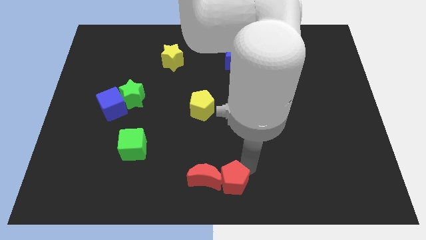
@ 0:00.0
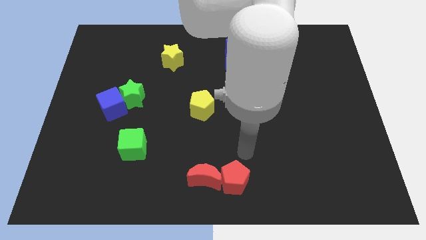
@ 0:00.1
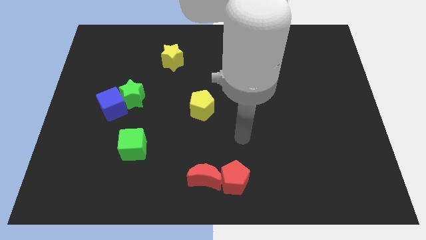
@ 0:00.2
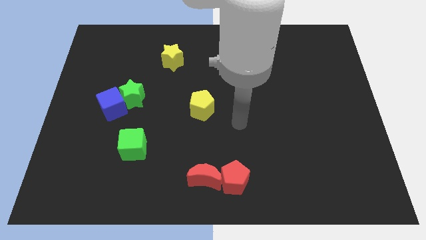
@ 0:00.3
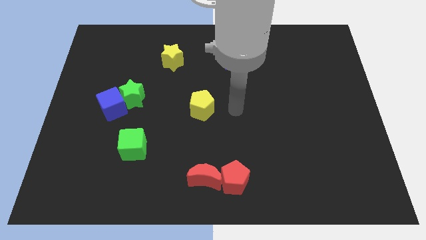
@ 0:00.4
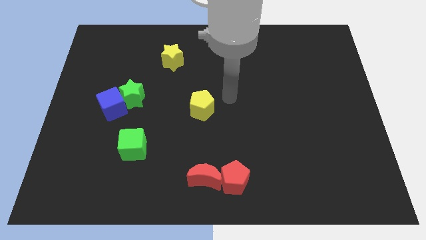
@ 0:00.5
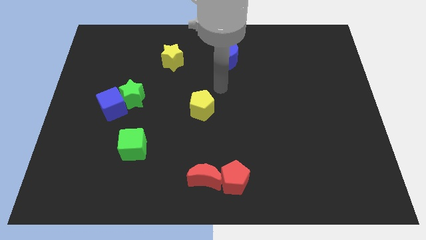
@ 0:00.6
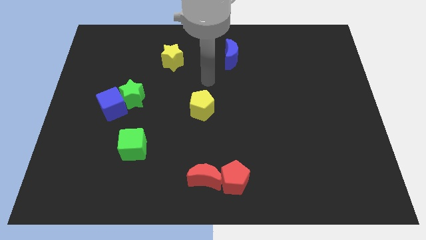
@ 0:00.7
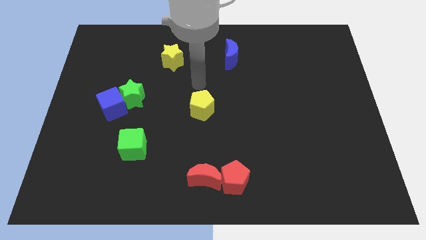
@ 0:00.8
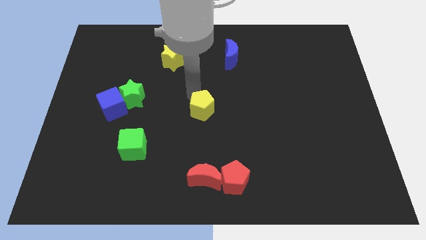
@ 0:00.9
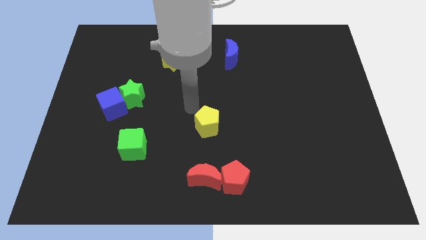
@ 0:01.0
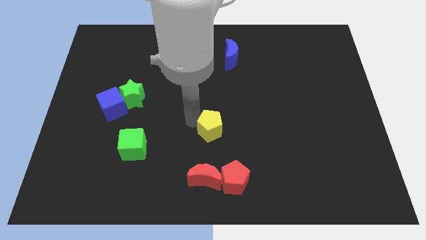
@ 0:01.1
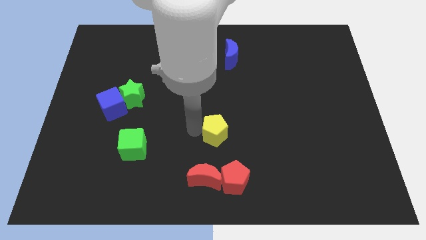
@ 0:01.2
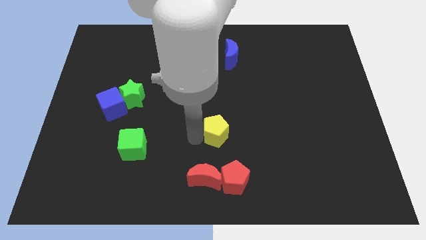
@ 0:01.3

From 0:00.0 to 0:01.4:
move the yellow pentagon parallel to top of the red crescent

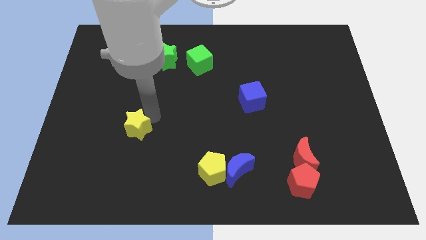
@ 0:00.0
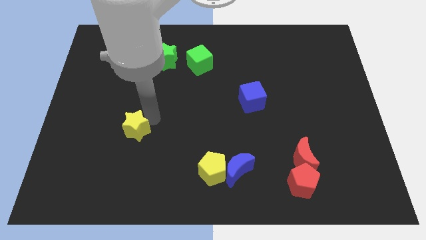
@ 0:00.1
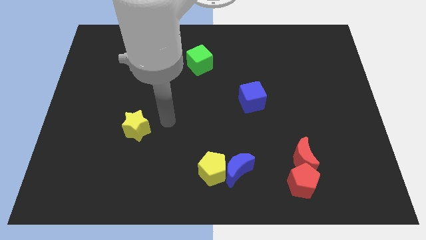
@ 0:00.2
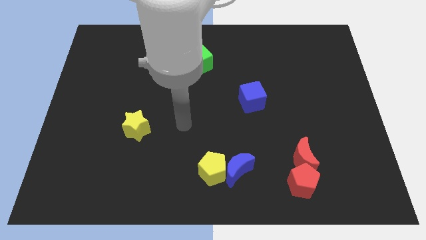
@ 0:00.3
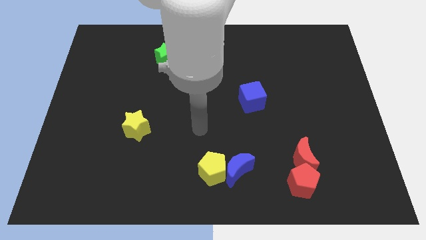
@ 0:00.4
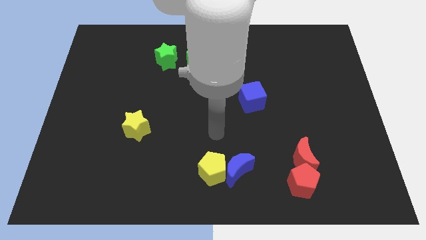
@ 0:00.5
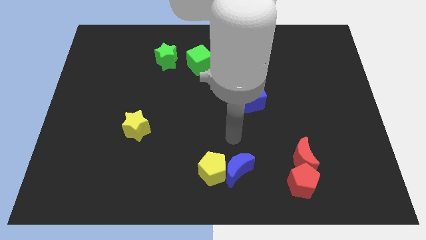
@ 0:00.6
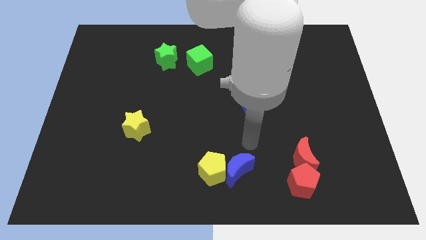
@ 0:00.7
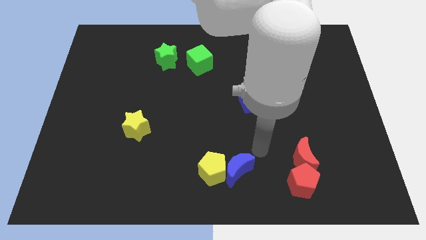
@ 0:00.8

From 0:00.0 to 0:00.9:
move your arm away from the yellow star

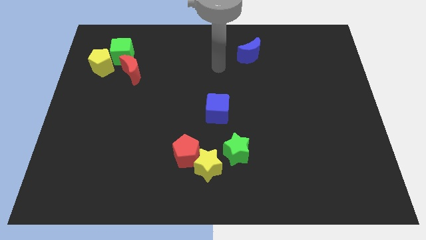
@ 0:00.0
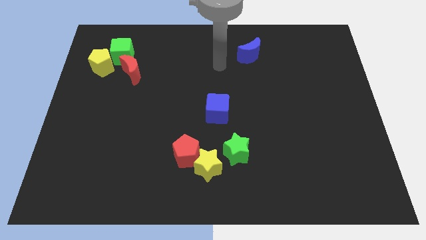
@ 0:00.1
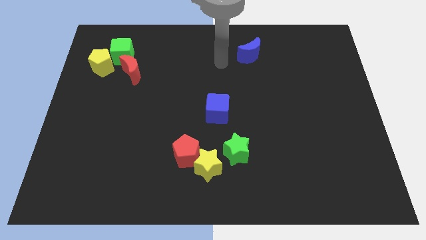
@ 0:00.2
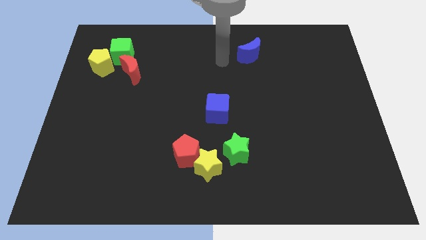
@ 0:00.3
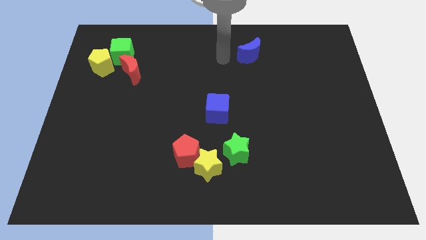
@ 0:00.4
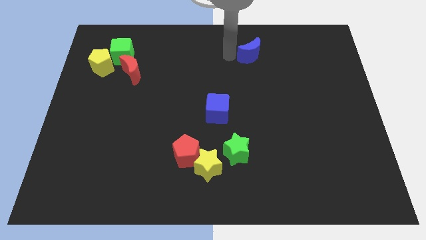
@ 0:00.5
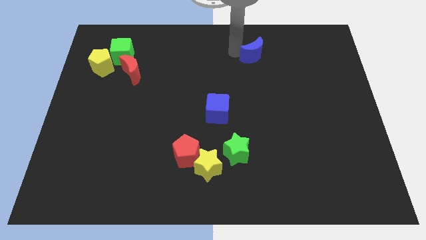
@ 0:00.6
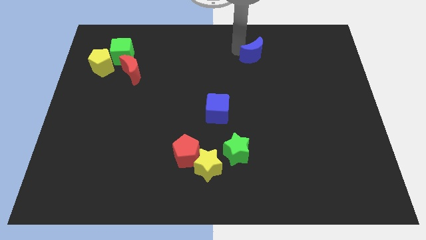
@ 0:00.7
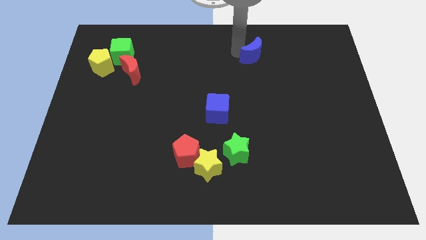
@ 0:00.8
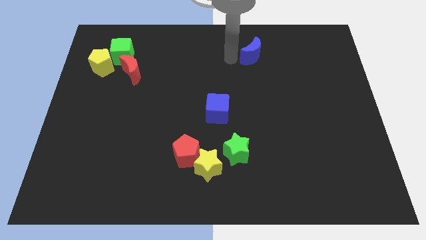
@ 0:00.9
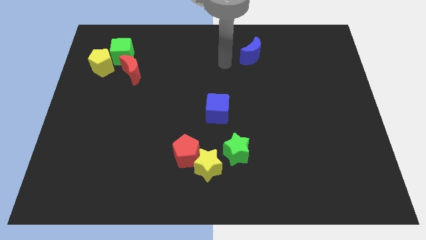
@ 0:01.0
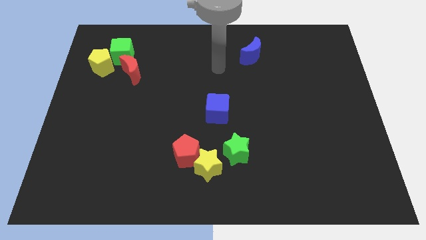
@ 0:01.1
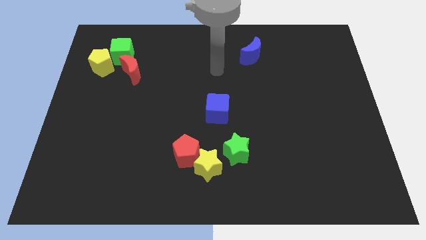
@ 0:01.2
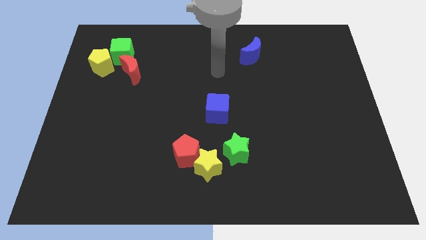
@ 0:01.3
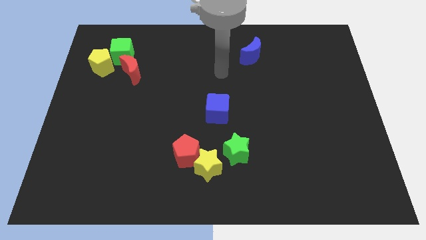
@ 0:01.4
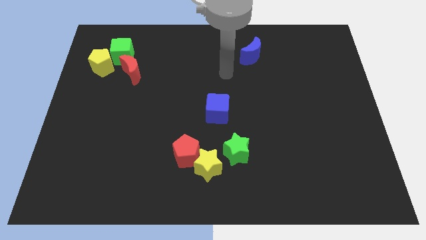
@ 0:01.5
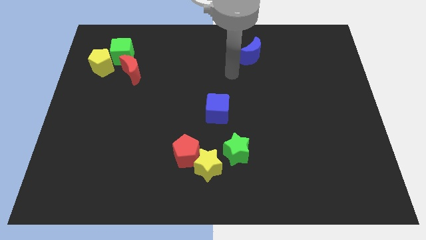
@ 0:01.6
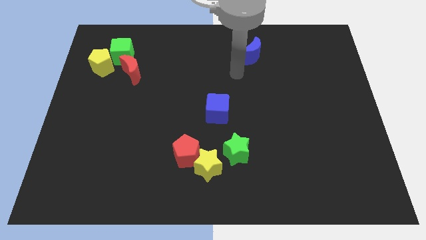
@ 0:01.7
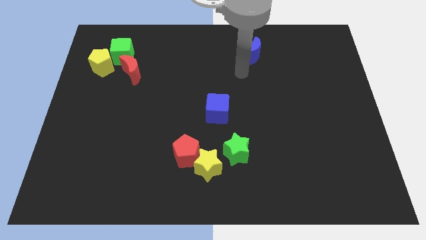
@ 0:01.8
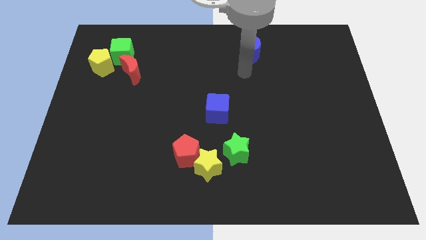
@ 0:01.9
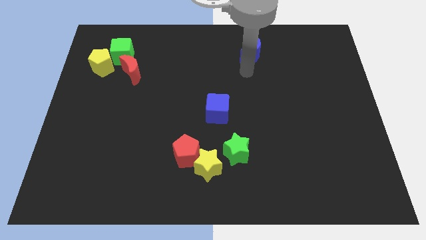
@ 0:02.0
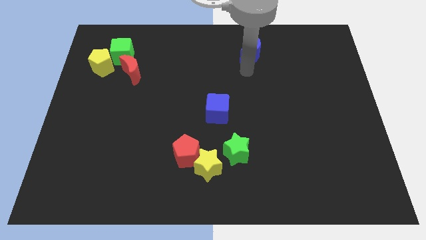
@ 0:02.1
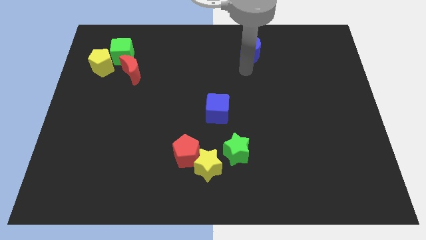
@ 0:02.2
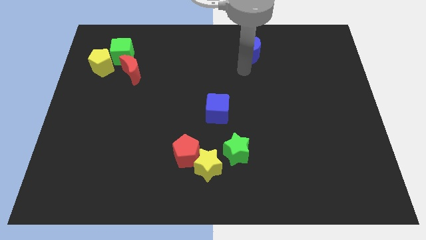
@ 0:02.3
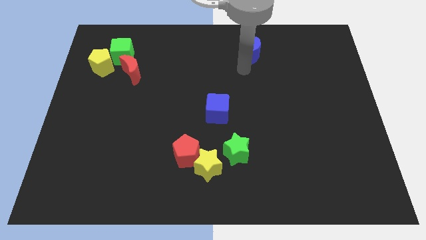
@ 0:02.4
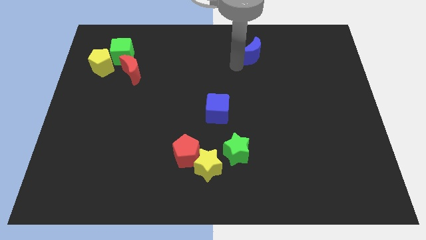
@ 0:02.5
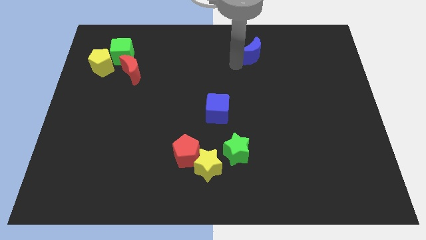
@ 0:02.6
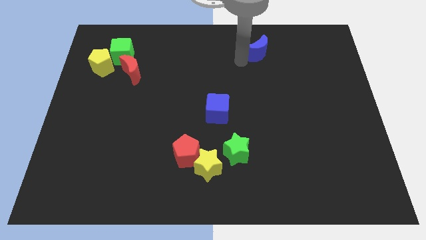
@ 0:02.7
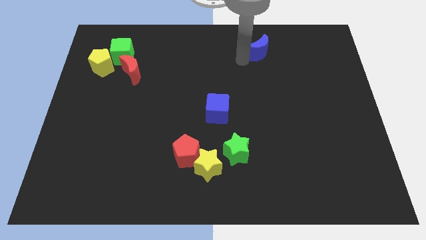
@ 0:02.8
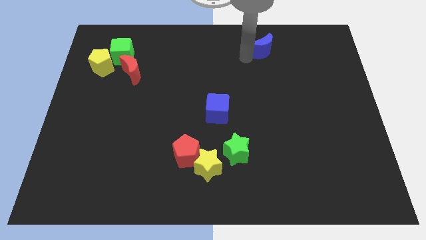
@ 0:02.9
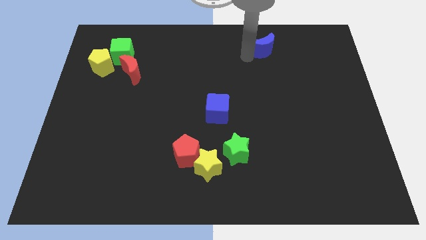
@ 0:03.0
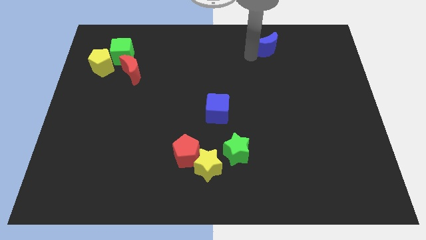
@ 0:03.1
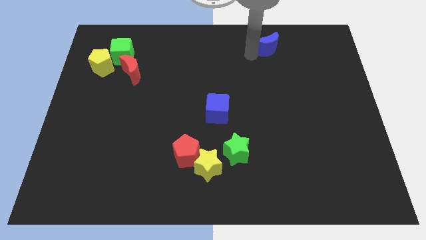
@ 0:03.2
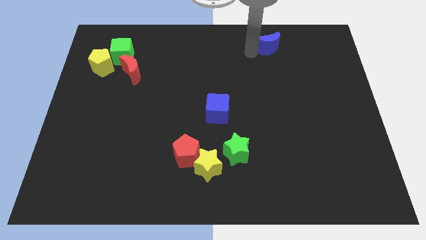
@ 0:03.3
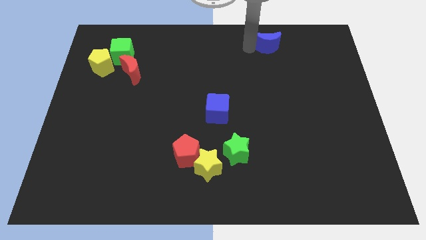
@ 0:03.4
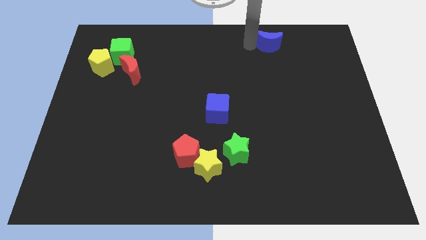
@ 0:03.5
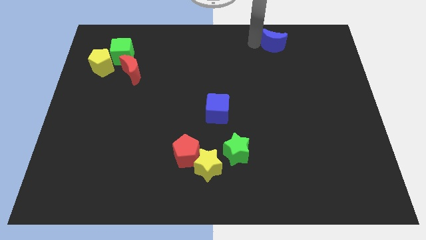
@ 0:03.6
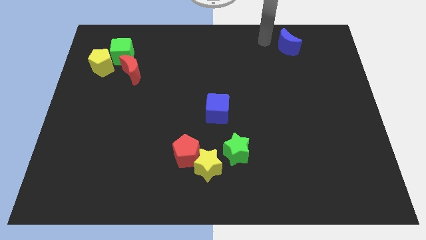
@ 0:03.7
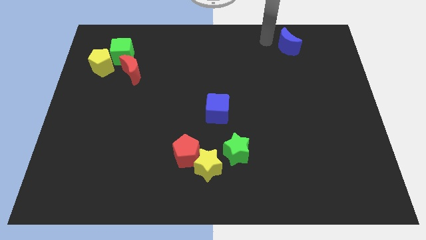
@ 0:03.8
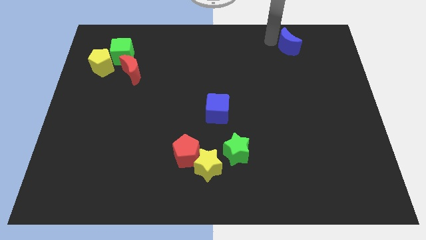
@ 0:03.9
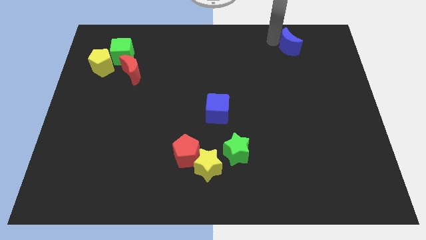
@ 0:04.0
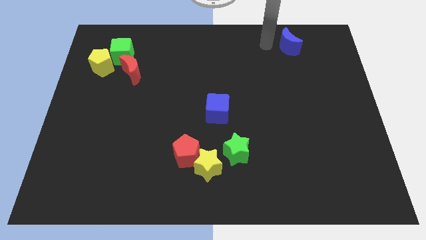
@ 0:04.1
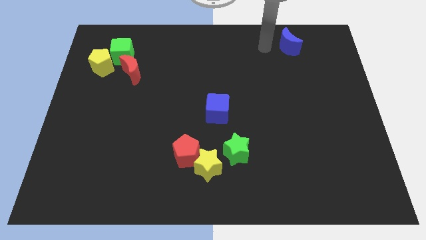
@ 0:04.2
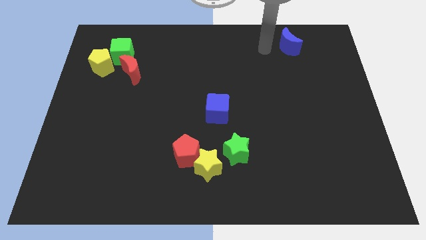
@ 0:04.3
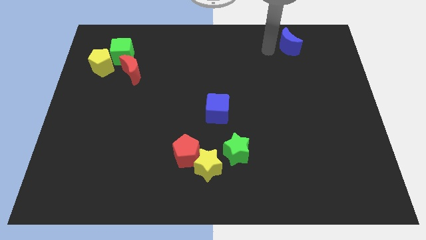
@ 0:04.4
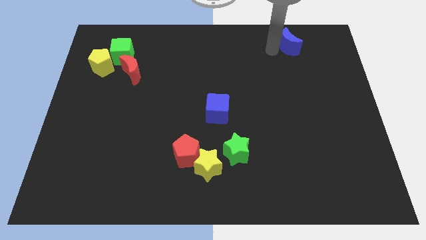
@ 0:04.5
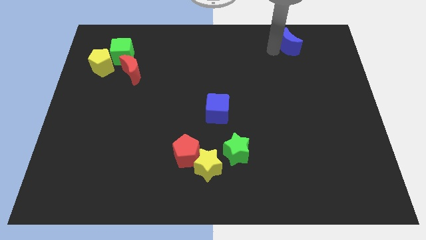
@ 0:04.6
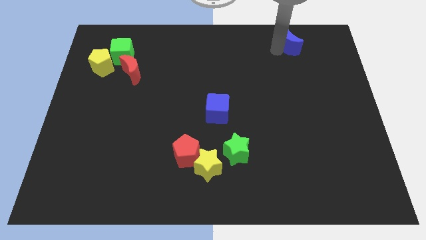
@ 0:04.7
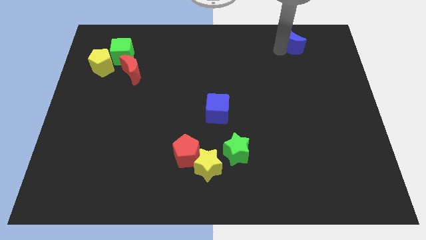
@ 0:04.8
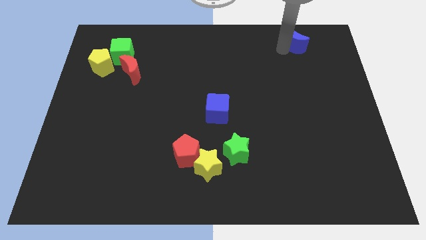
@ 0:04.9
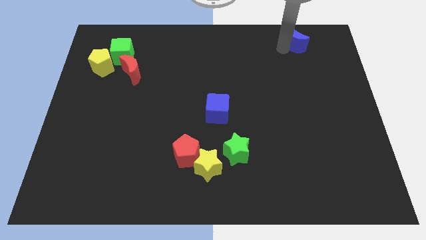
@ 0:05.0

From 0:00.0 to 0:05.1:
push blue moon towards top right

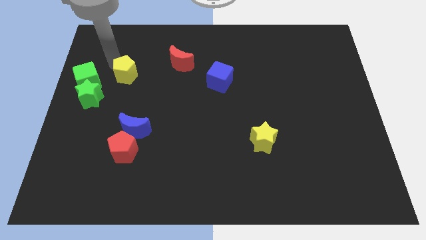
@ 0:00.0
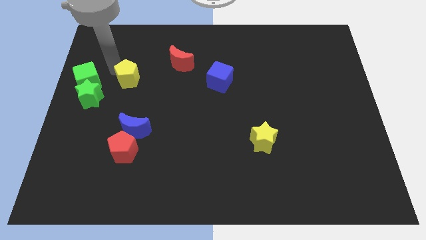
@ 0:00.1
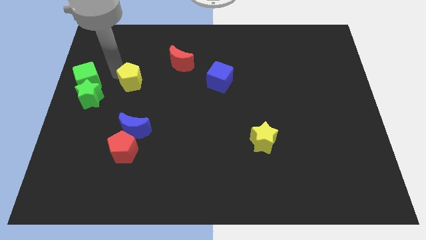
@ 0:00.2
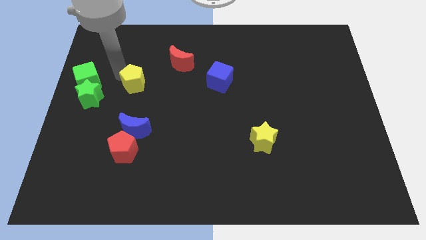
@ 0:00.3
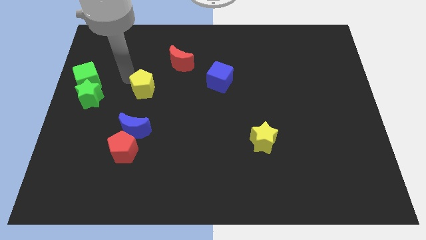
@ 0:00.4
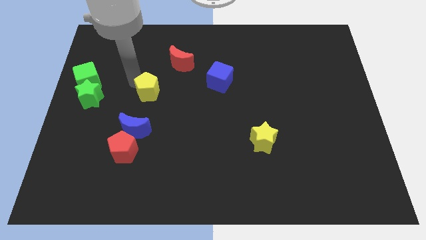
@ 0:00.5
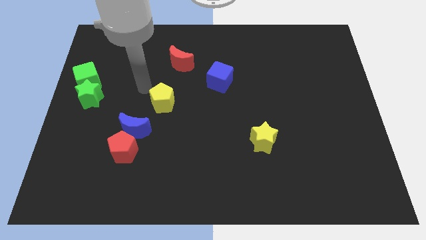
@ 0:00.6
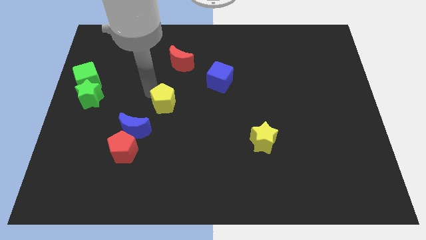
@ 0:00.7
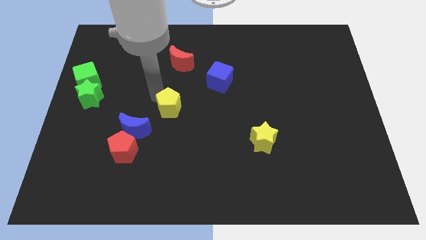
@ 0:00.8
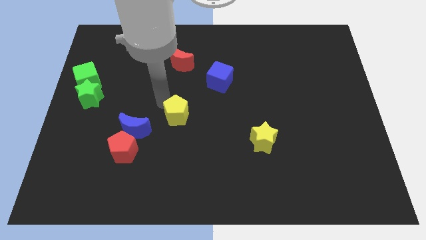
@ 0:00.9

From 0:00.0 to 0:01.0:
place the yellow pentagon in between the blue cube and blue moon

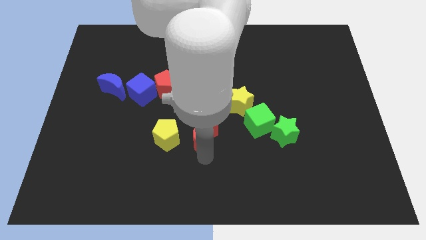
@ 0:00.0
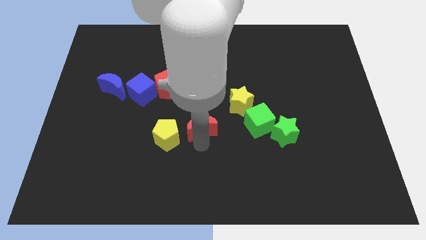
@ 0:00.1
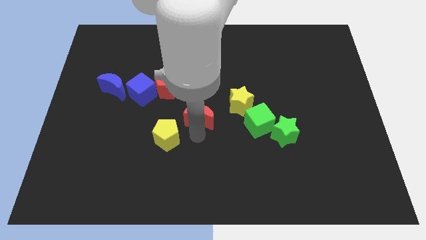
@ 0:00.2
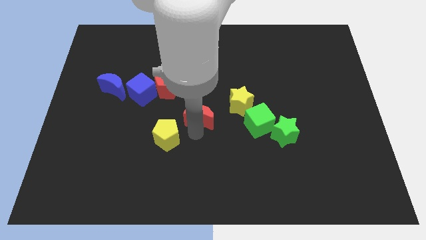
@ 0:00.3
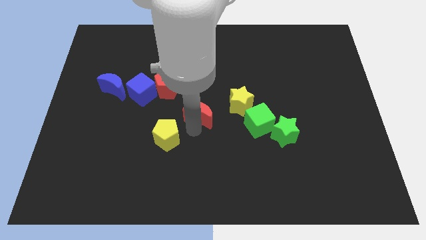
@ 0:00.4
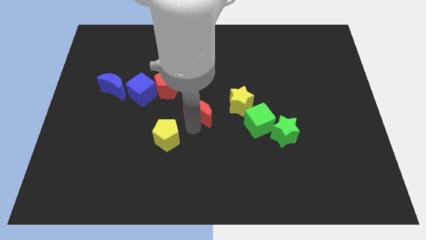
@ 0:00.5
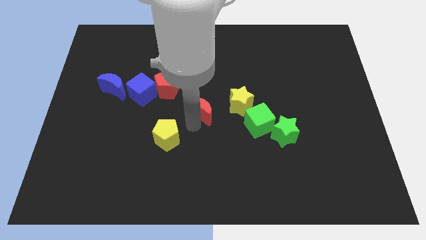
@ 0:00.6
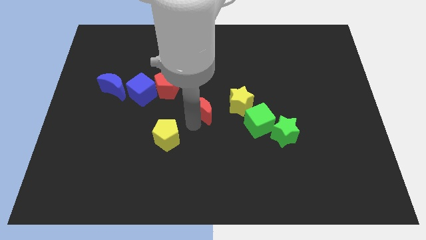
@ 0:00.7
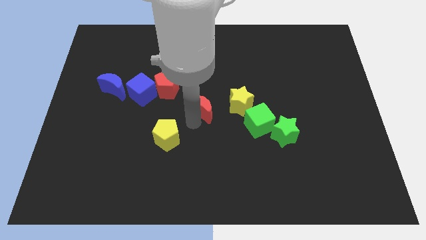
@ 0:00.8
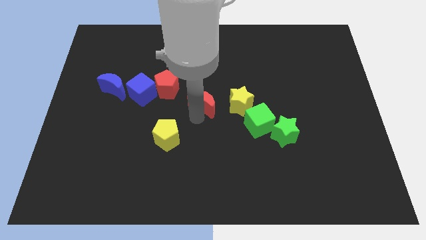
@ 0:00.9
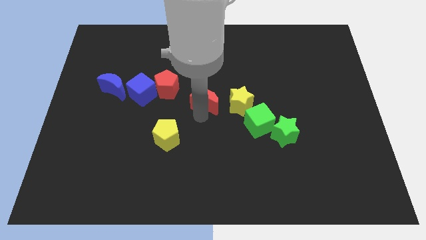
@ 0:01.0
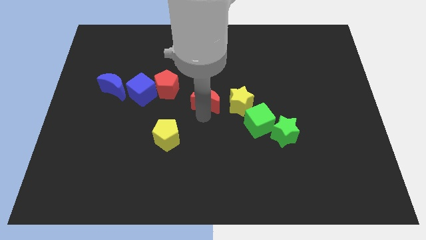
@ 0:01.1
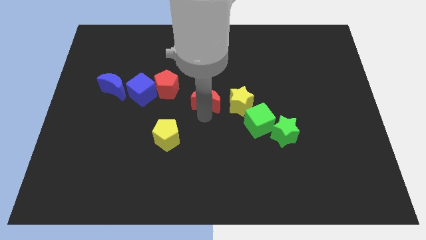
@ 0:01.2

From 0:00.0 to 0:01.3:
move red moon in to center
